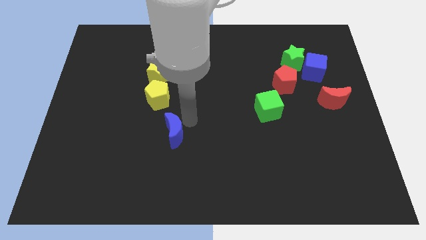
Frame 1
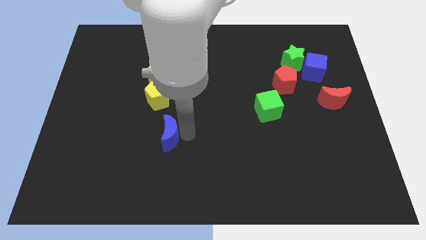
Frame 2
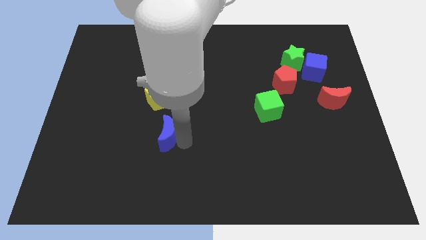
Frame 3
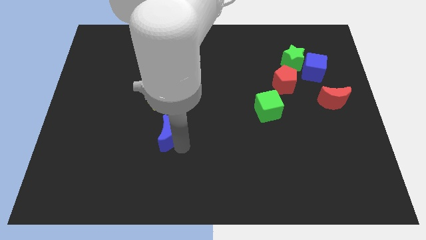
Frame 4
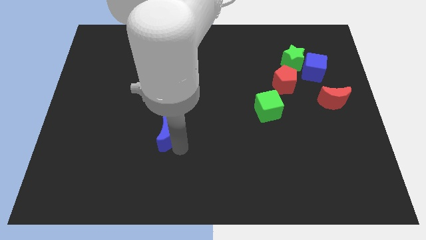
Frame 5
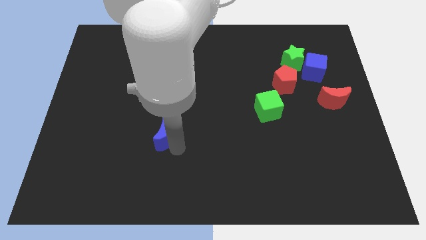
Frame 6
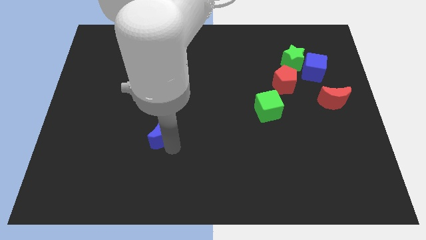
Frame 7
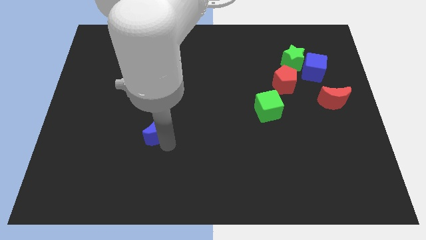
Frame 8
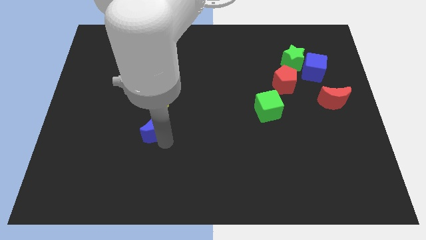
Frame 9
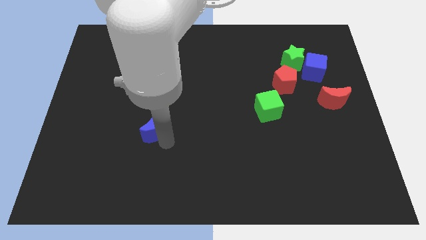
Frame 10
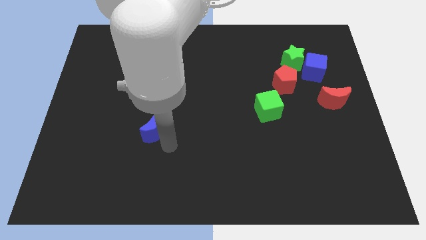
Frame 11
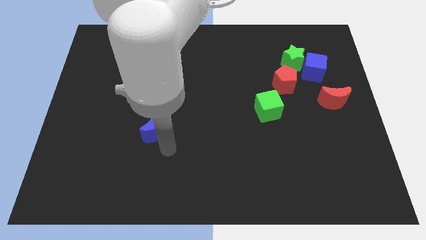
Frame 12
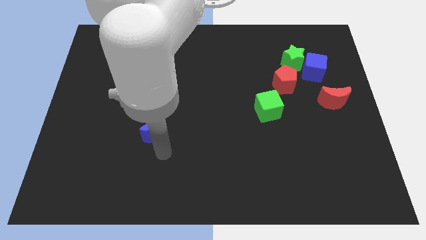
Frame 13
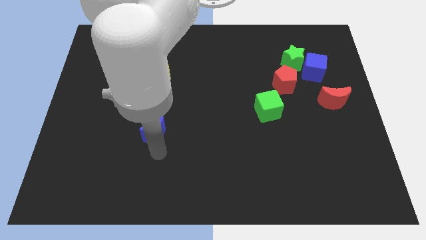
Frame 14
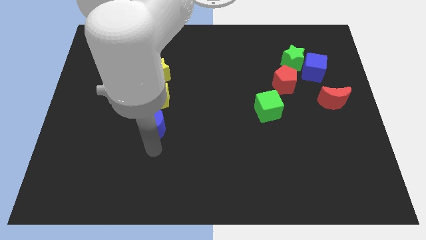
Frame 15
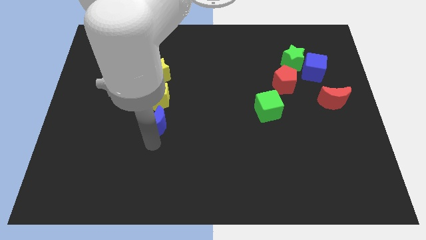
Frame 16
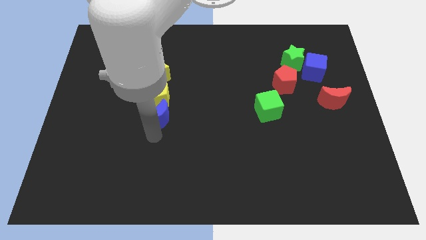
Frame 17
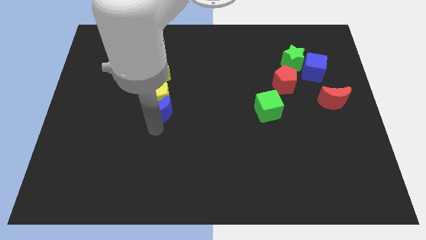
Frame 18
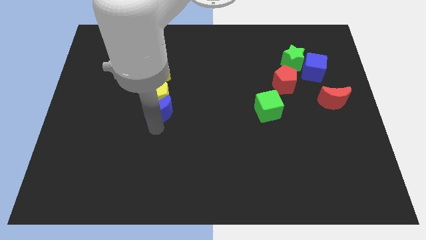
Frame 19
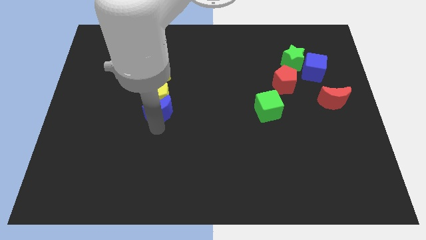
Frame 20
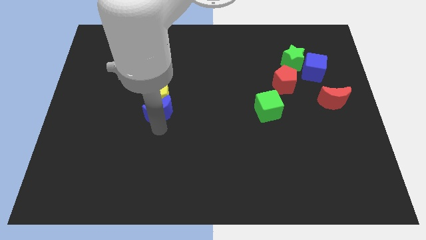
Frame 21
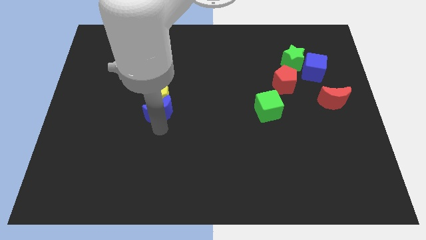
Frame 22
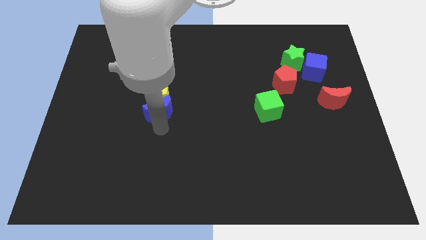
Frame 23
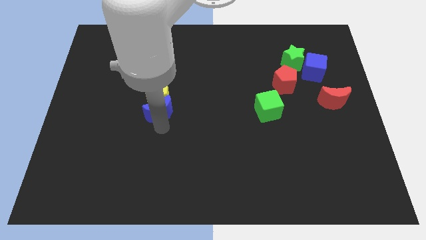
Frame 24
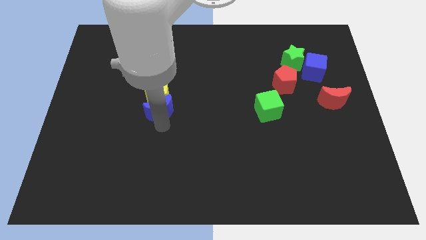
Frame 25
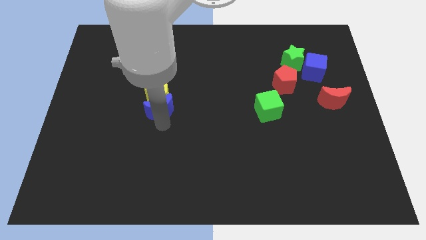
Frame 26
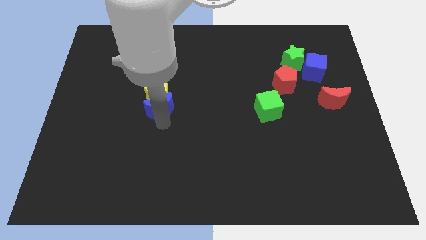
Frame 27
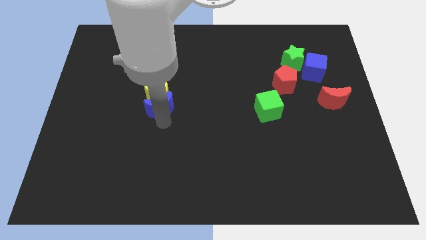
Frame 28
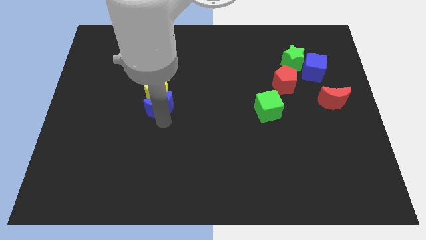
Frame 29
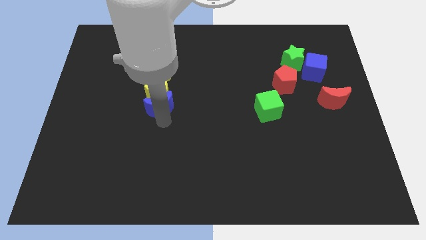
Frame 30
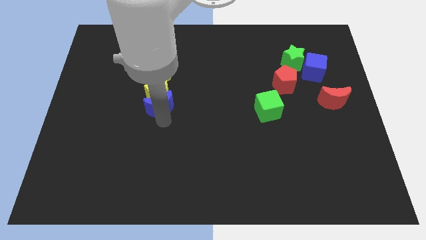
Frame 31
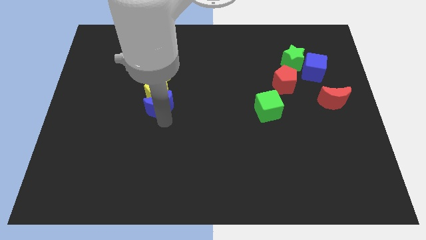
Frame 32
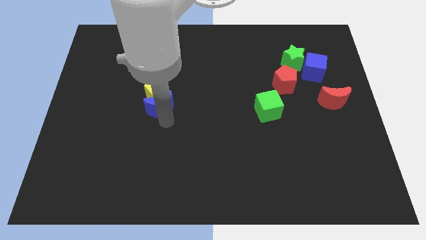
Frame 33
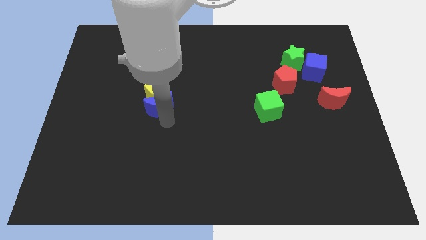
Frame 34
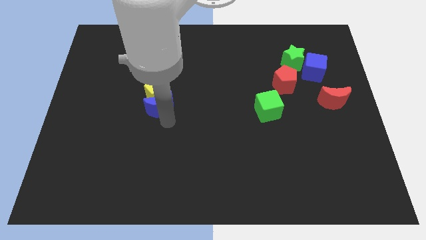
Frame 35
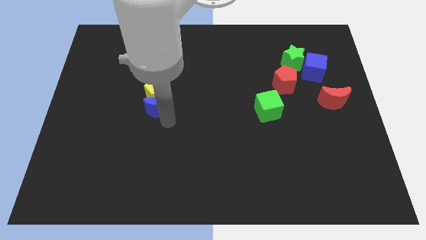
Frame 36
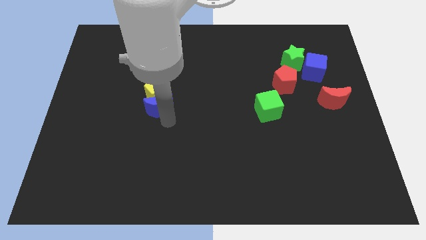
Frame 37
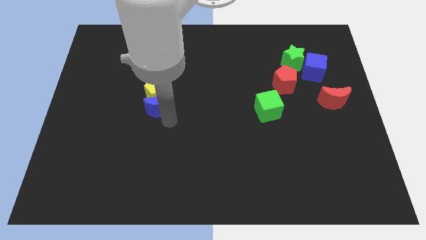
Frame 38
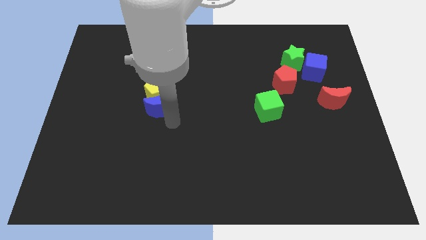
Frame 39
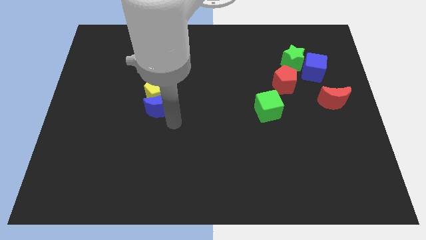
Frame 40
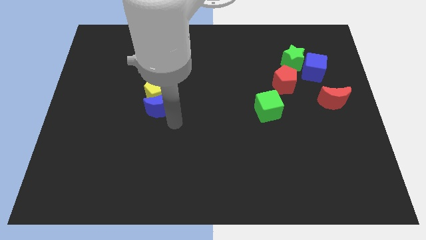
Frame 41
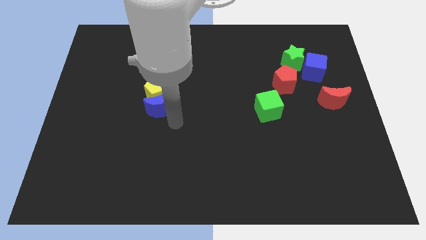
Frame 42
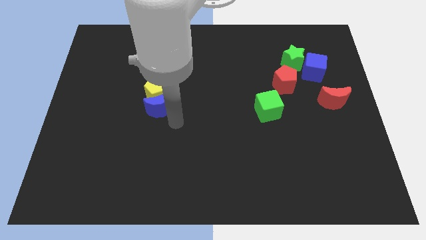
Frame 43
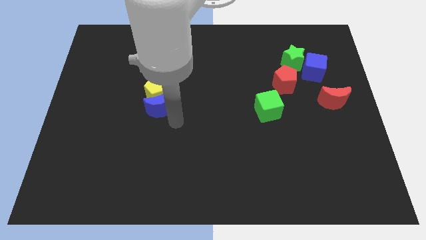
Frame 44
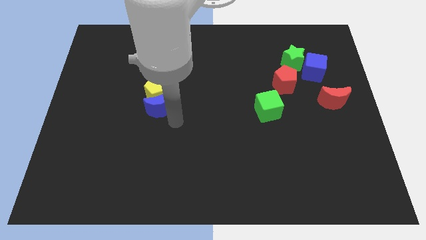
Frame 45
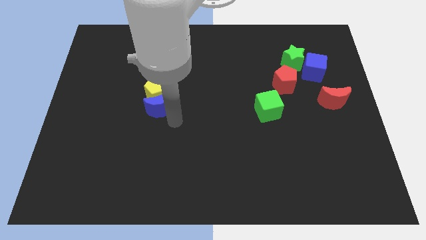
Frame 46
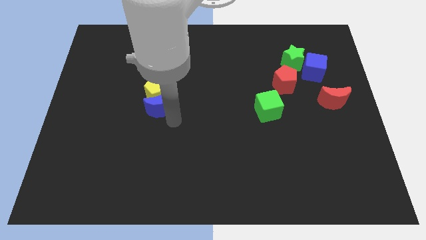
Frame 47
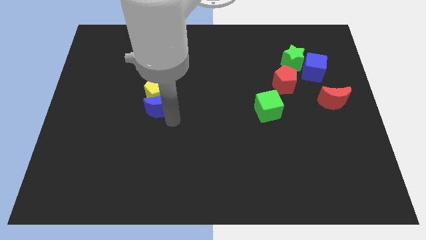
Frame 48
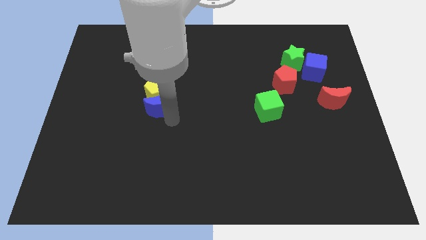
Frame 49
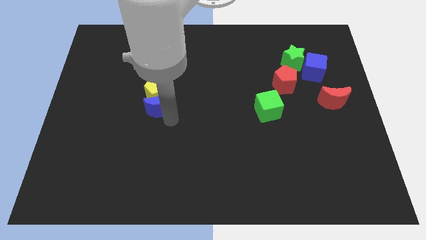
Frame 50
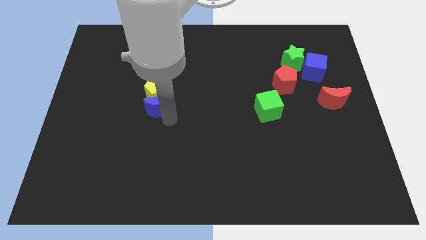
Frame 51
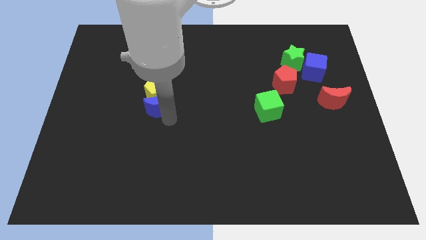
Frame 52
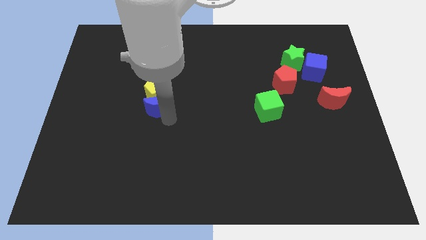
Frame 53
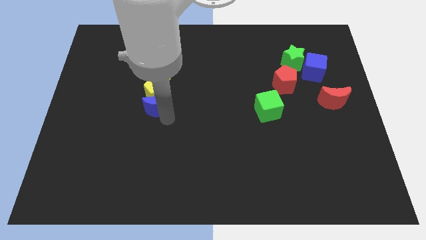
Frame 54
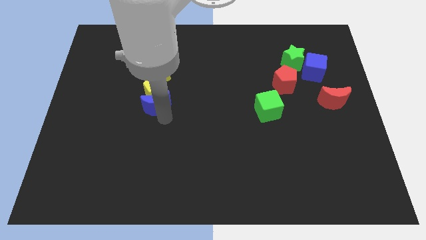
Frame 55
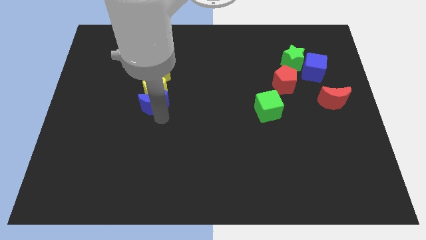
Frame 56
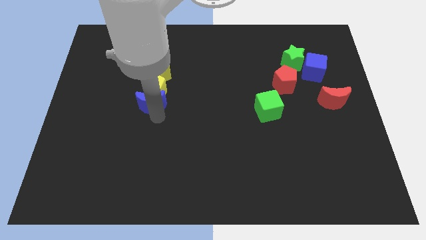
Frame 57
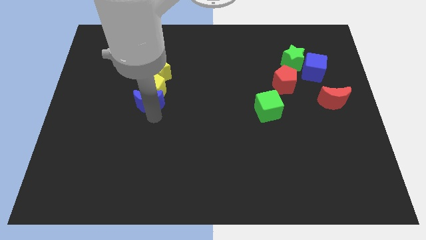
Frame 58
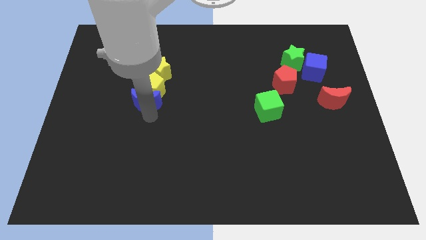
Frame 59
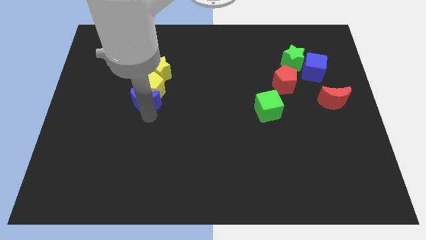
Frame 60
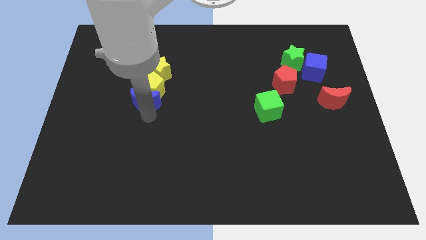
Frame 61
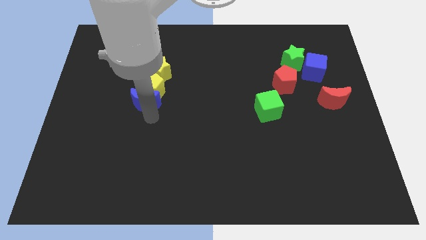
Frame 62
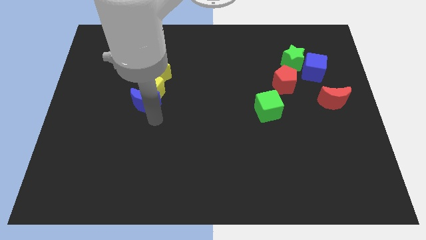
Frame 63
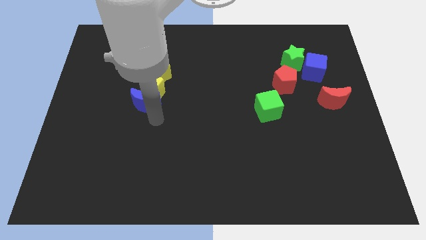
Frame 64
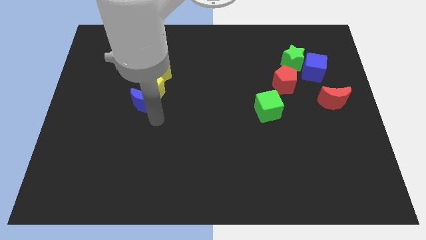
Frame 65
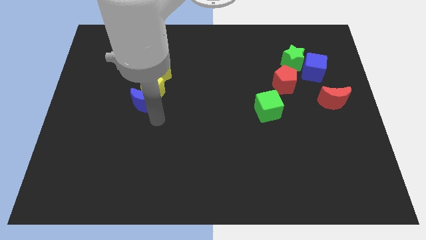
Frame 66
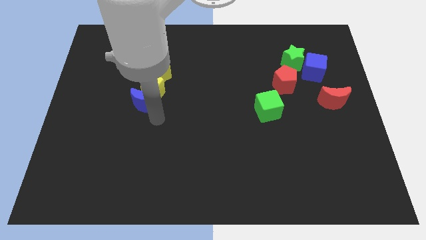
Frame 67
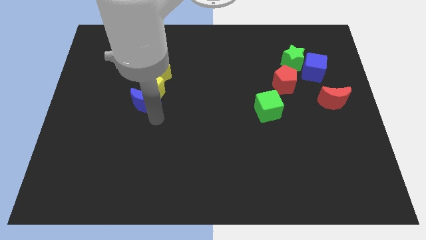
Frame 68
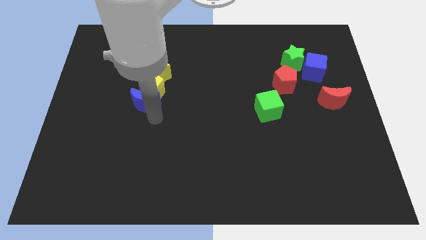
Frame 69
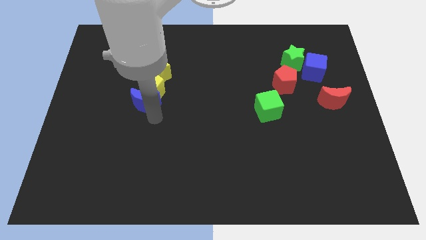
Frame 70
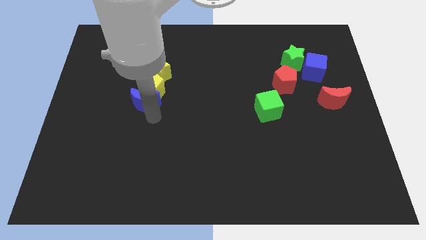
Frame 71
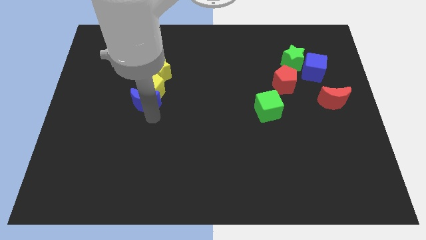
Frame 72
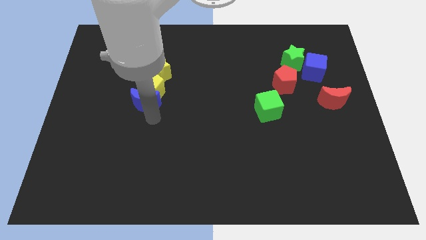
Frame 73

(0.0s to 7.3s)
push the blue crescent into the yellow pentagon

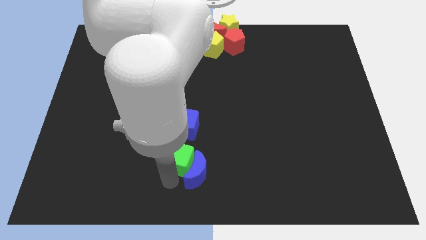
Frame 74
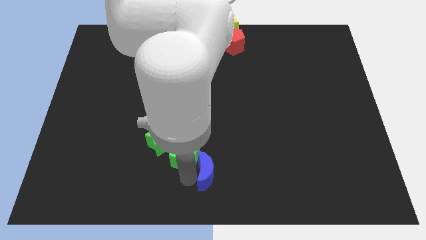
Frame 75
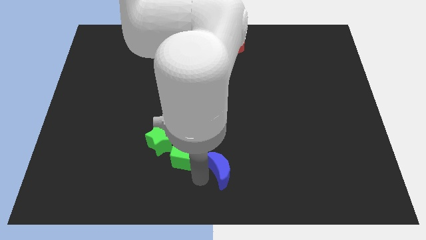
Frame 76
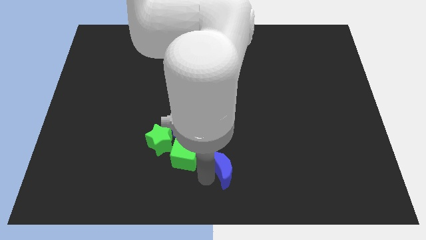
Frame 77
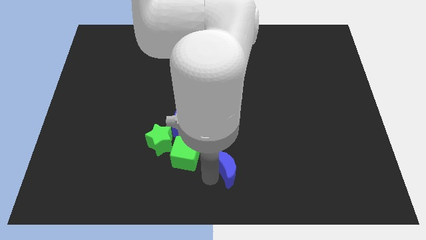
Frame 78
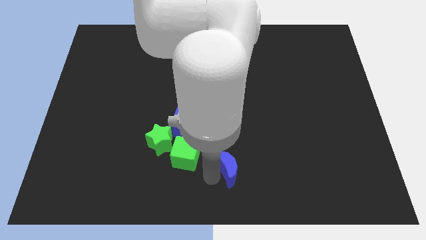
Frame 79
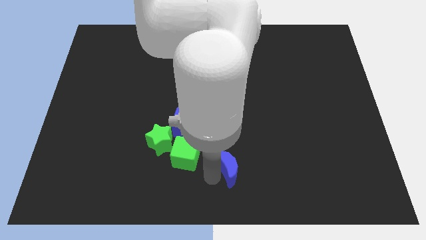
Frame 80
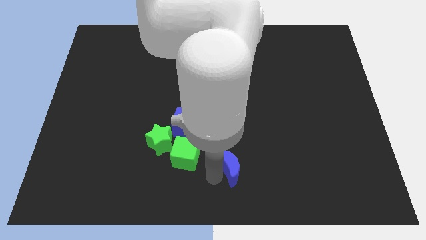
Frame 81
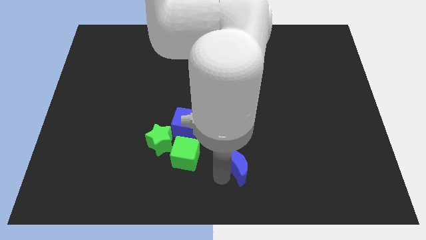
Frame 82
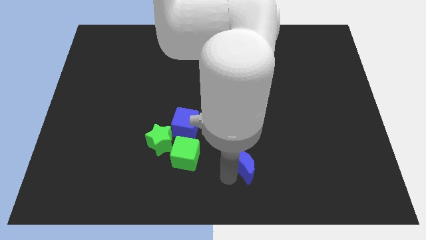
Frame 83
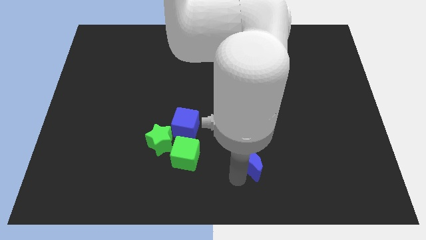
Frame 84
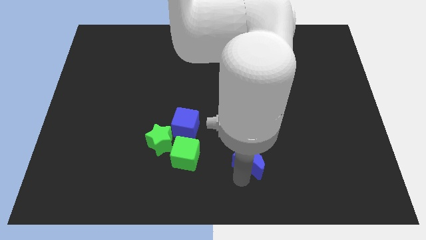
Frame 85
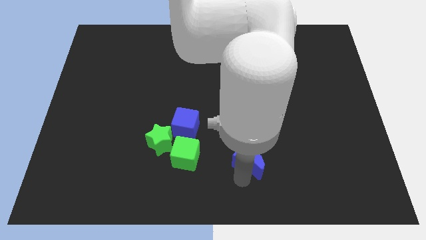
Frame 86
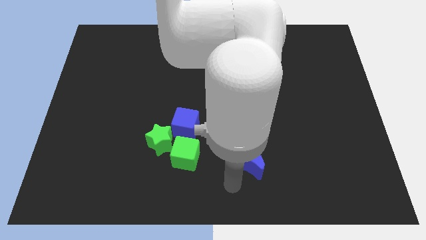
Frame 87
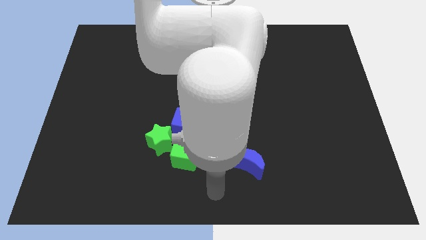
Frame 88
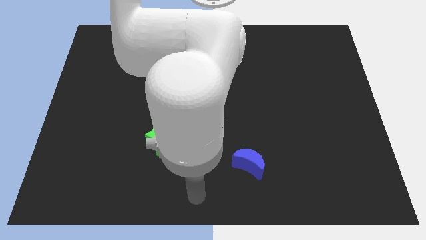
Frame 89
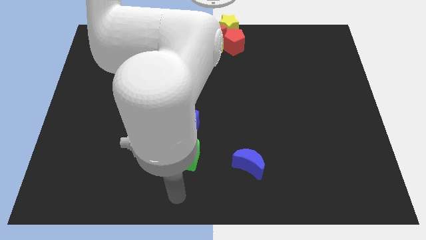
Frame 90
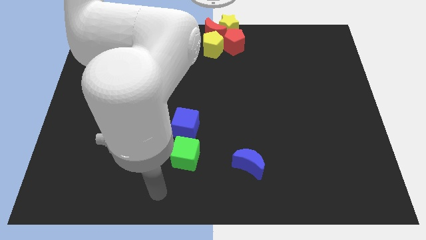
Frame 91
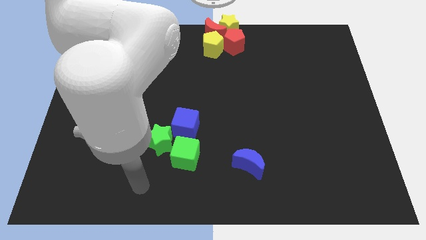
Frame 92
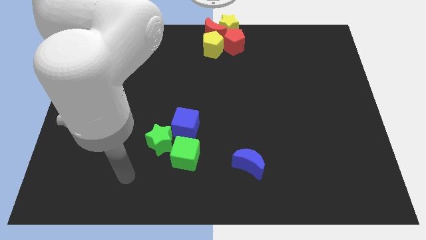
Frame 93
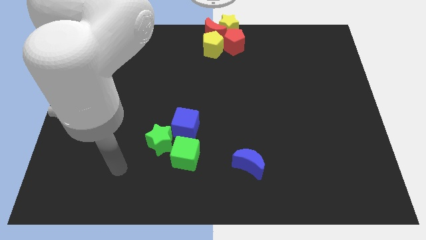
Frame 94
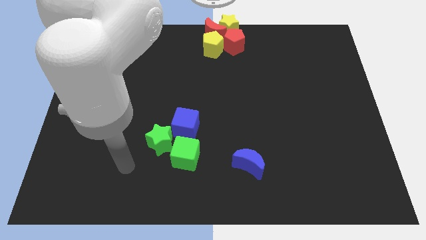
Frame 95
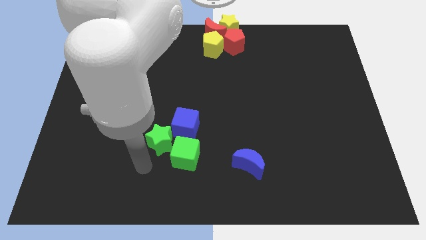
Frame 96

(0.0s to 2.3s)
move the blue moon away from the green cube
